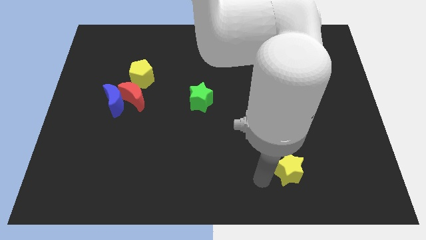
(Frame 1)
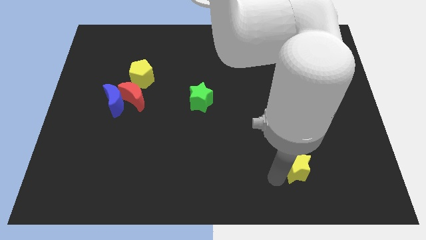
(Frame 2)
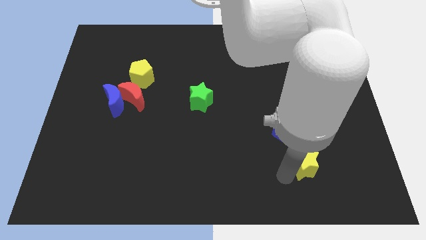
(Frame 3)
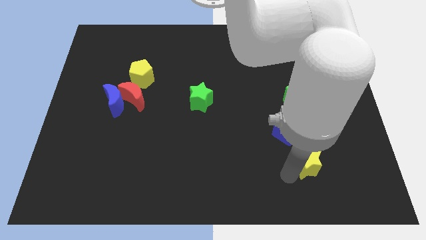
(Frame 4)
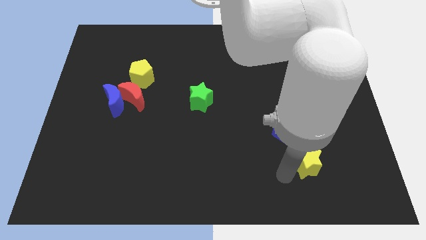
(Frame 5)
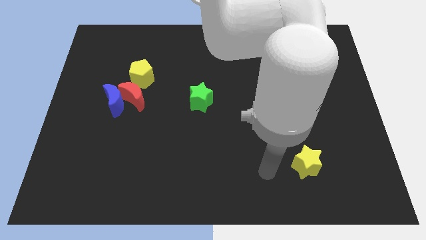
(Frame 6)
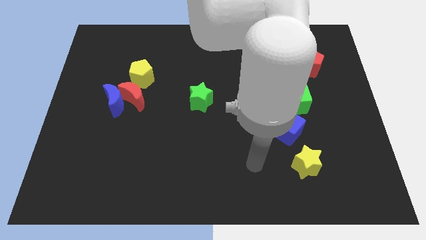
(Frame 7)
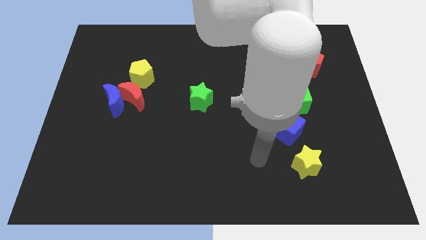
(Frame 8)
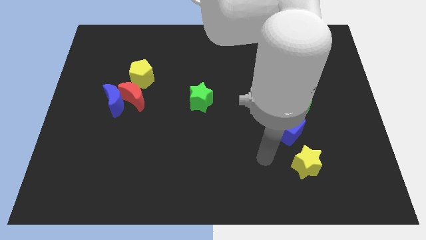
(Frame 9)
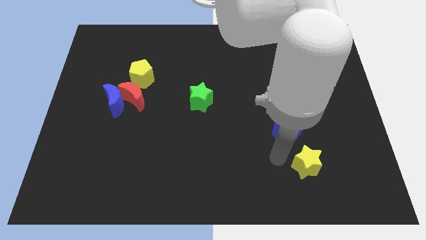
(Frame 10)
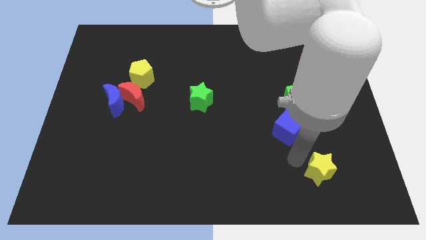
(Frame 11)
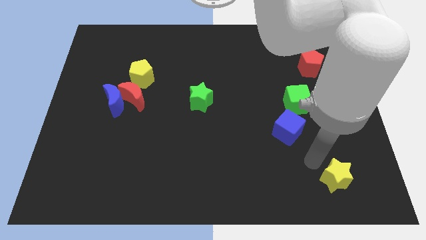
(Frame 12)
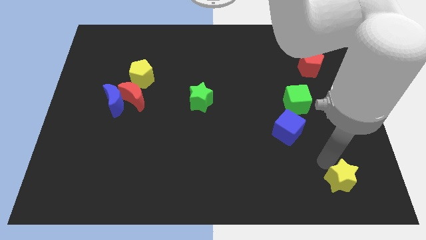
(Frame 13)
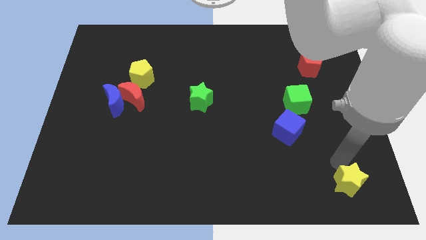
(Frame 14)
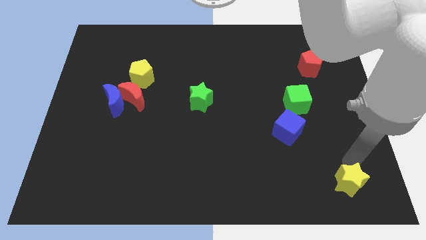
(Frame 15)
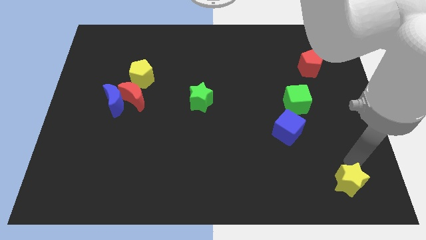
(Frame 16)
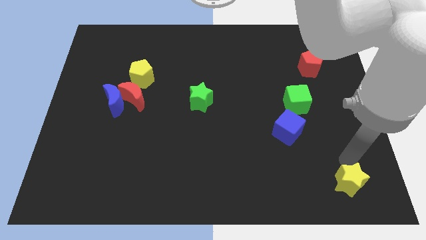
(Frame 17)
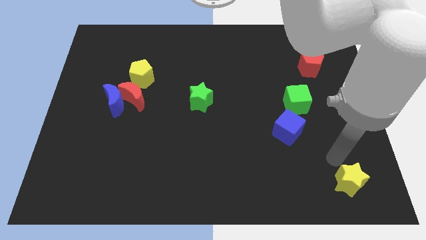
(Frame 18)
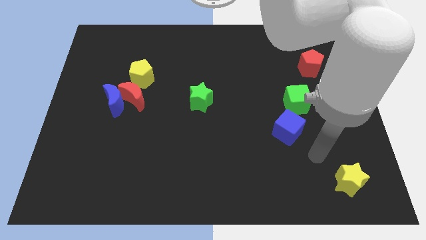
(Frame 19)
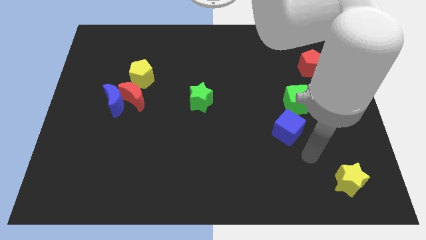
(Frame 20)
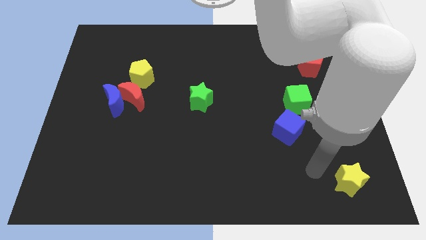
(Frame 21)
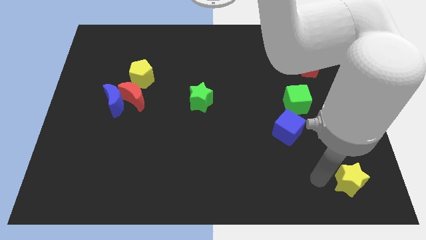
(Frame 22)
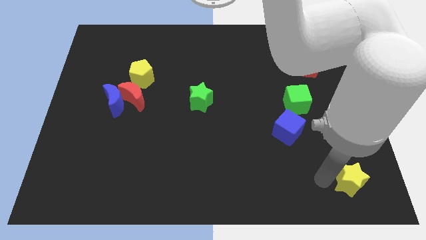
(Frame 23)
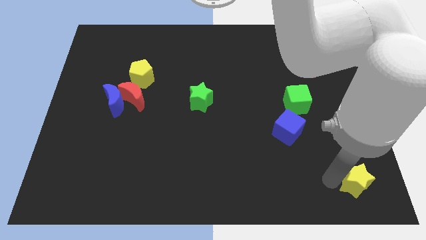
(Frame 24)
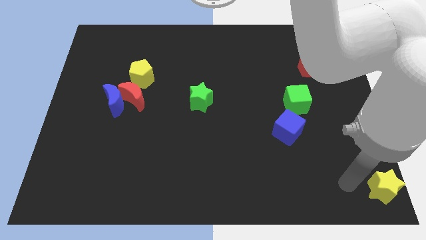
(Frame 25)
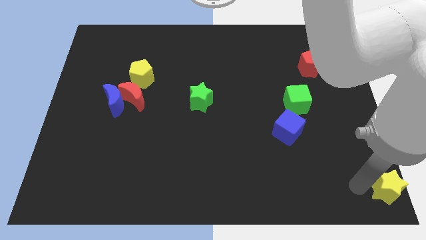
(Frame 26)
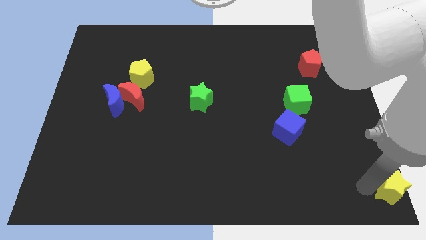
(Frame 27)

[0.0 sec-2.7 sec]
drag the yellow star to the bottom right

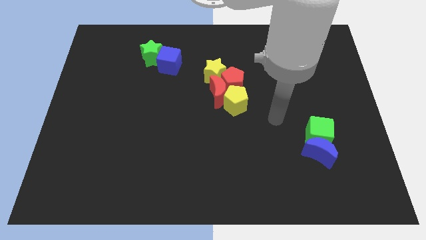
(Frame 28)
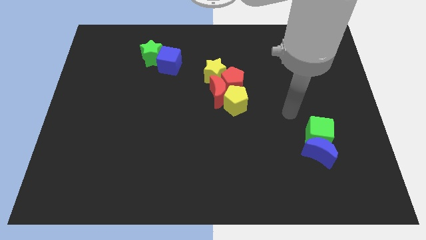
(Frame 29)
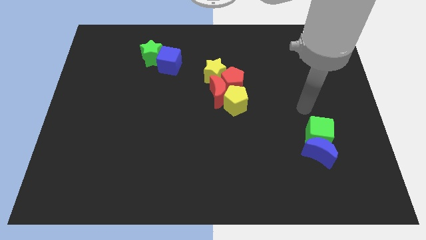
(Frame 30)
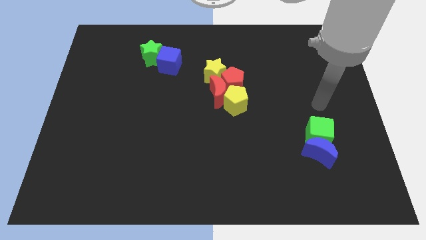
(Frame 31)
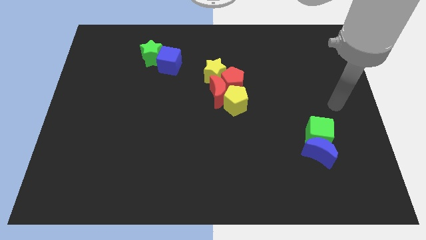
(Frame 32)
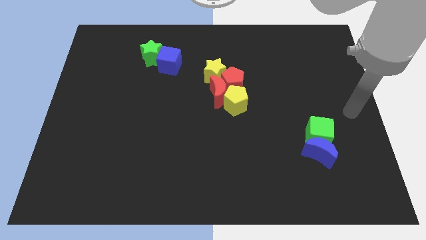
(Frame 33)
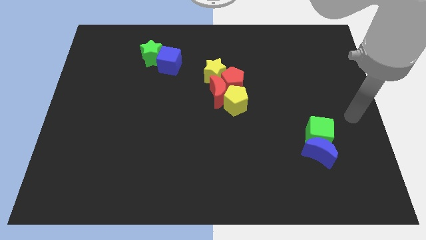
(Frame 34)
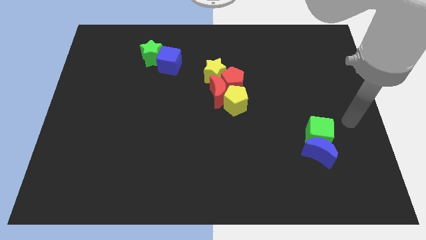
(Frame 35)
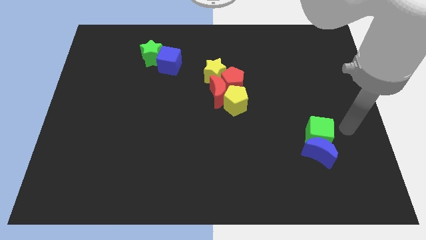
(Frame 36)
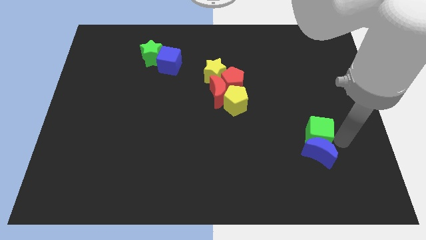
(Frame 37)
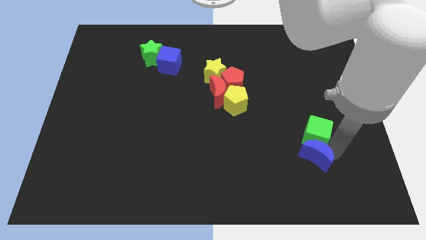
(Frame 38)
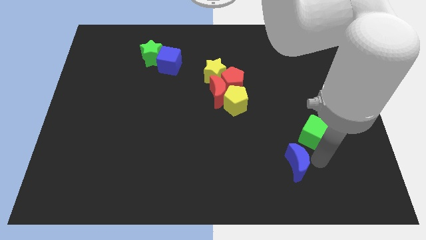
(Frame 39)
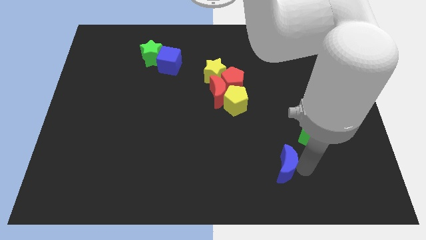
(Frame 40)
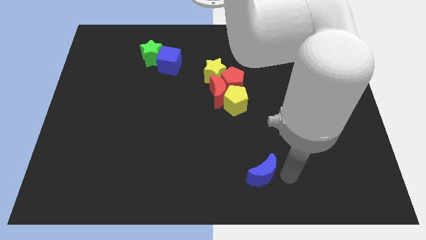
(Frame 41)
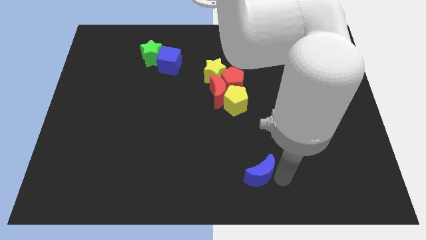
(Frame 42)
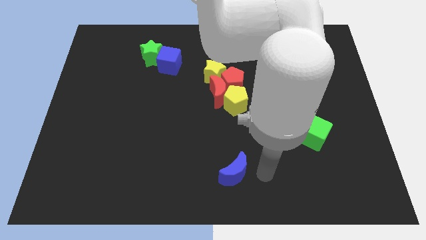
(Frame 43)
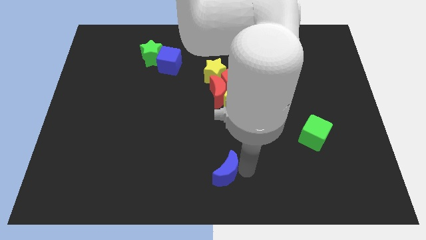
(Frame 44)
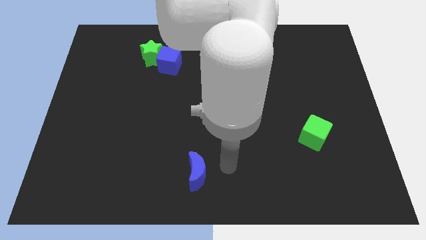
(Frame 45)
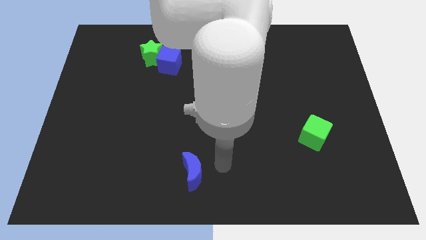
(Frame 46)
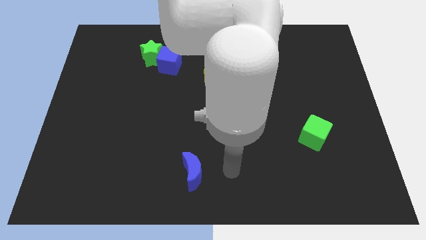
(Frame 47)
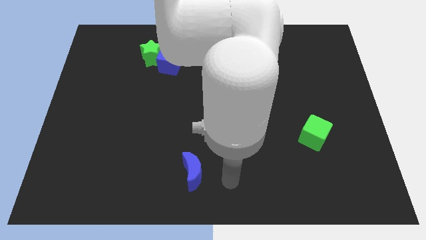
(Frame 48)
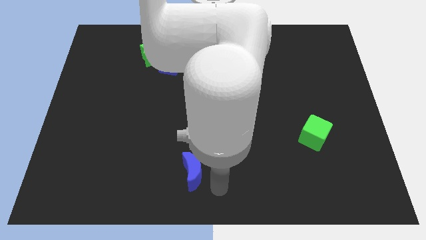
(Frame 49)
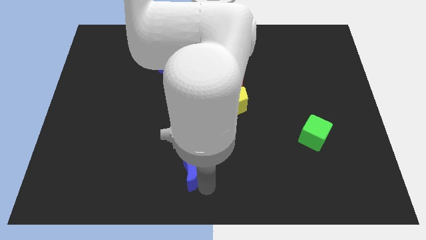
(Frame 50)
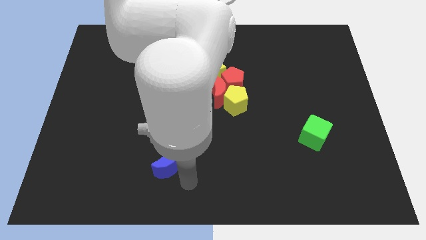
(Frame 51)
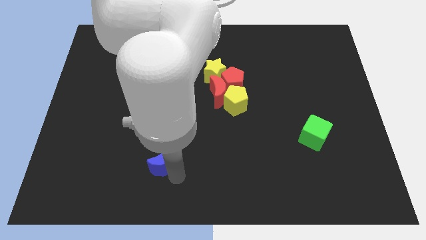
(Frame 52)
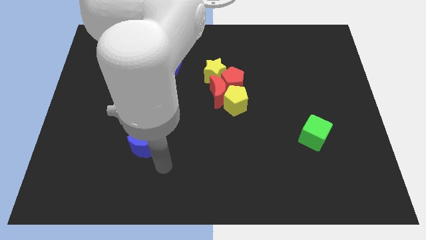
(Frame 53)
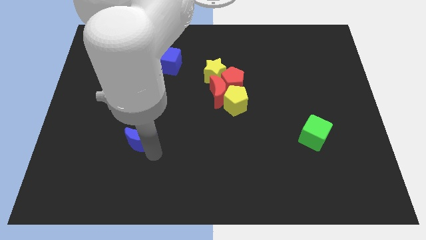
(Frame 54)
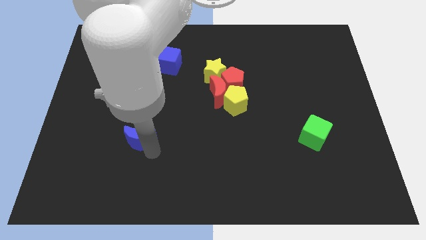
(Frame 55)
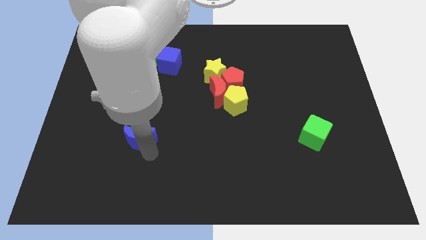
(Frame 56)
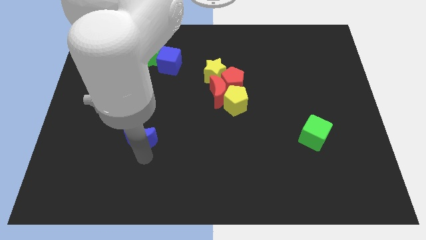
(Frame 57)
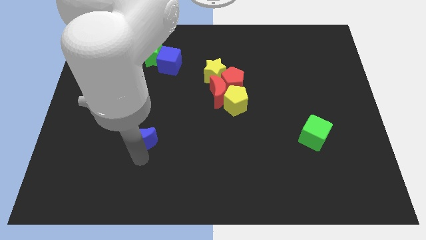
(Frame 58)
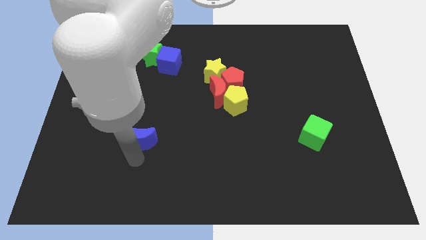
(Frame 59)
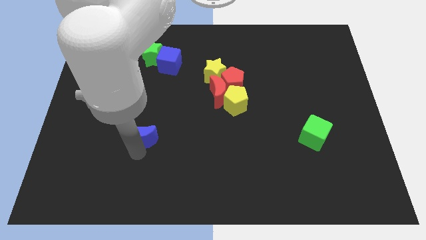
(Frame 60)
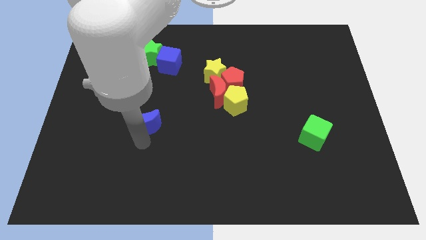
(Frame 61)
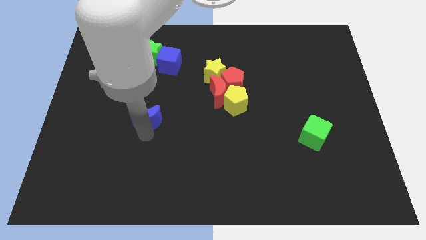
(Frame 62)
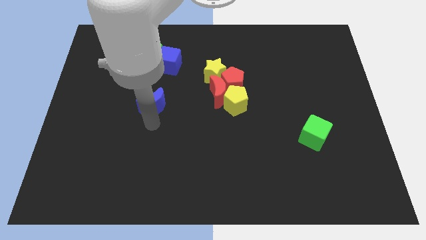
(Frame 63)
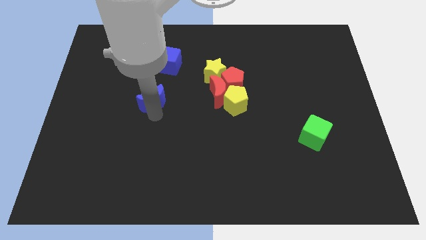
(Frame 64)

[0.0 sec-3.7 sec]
place the blue moon left to the red moon

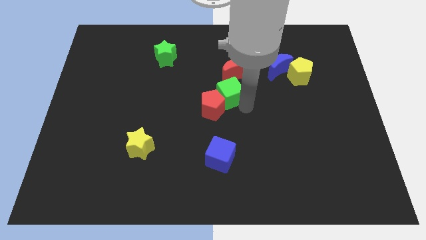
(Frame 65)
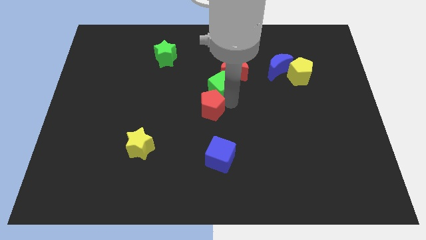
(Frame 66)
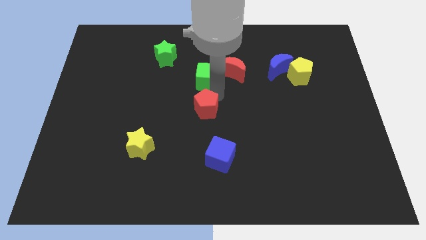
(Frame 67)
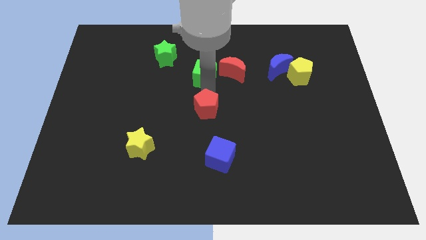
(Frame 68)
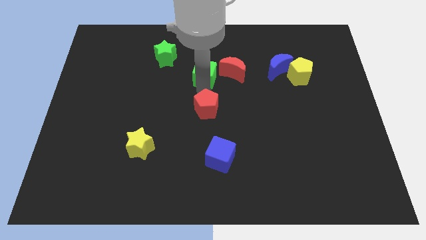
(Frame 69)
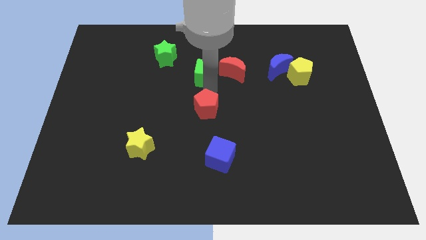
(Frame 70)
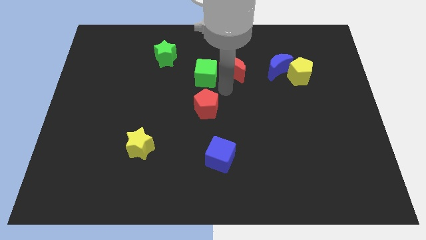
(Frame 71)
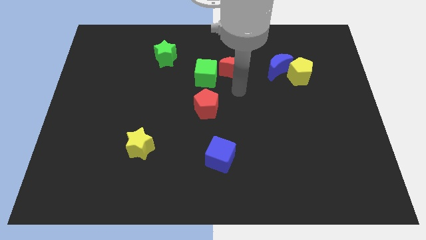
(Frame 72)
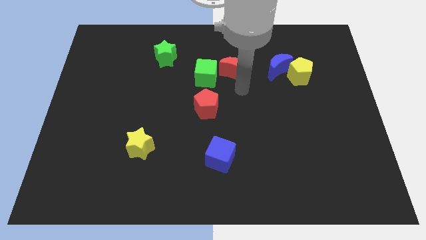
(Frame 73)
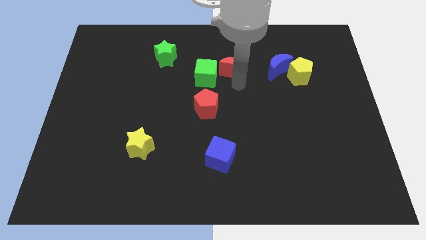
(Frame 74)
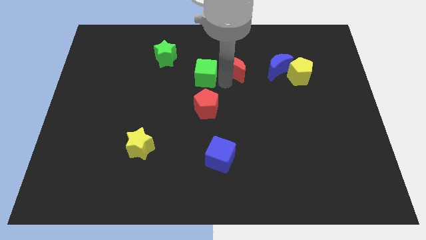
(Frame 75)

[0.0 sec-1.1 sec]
arrange the green cube on the top of the red pentagon

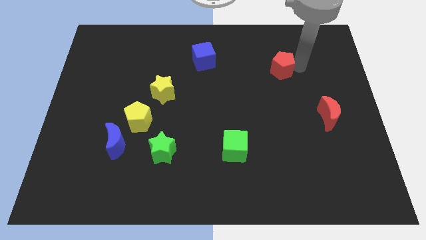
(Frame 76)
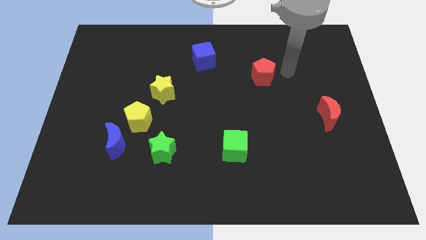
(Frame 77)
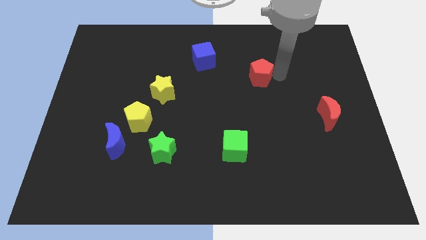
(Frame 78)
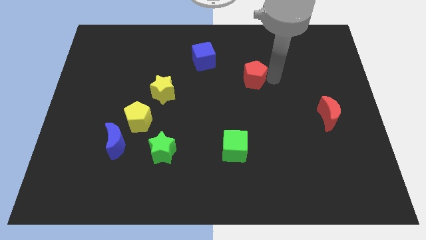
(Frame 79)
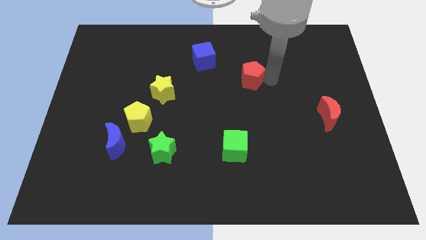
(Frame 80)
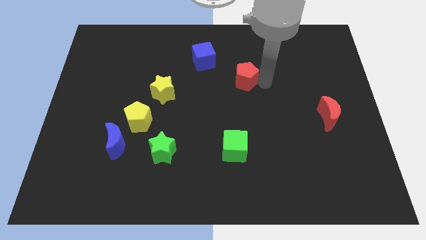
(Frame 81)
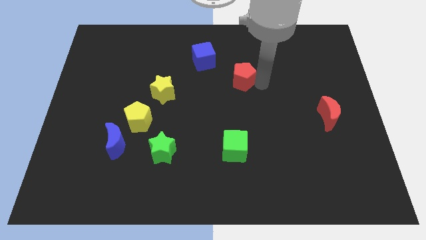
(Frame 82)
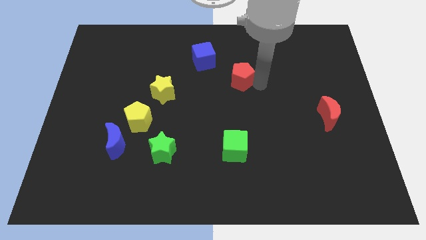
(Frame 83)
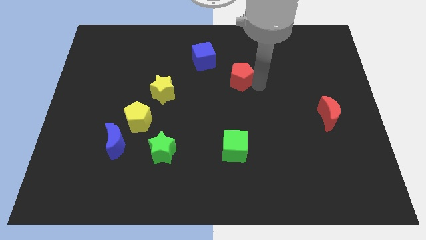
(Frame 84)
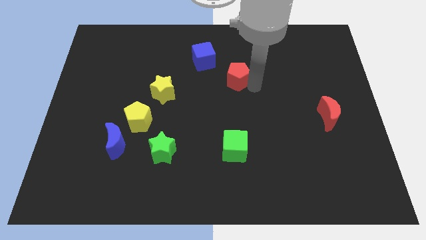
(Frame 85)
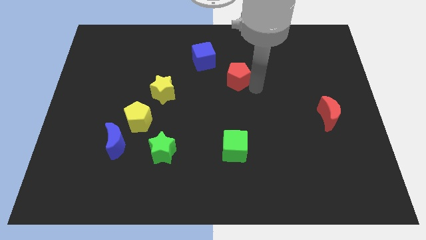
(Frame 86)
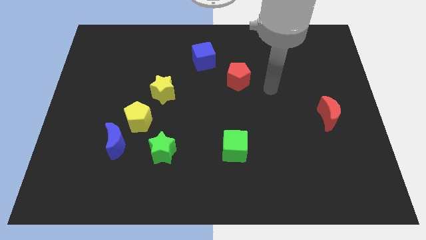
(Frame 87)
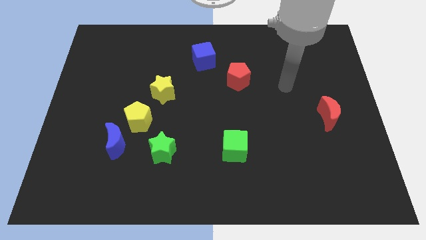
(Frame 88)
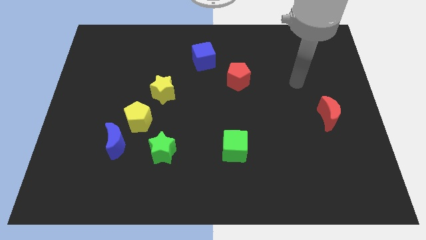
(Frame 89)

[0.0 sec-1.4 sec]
push the red pentagon close to the blue cube

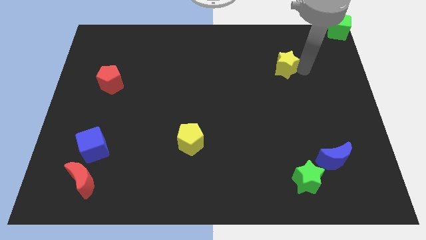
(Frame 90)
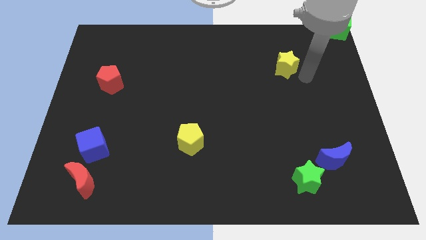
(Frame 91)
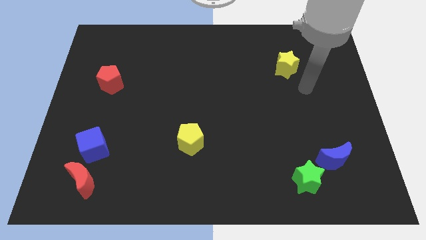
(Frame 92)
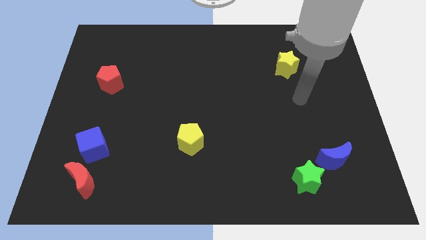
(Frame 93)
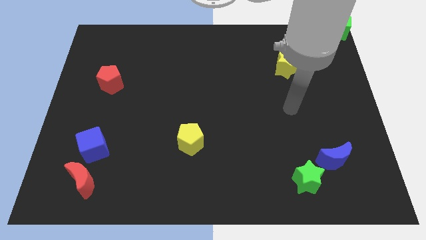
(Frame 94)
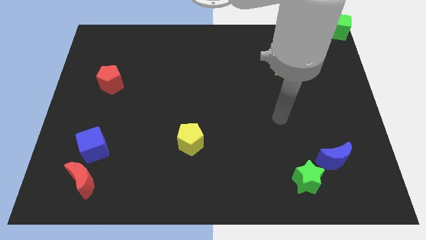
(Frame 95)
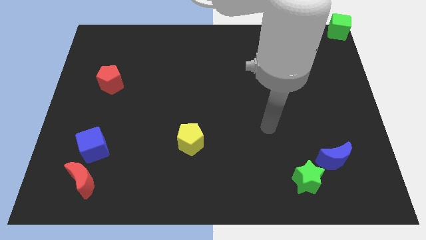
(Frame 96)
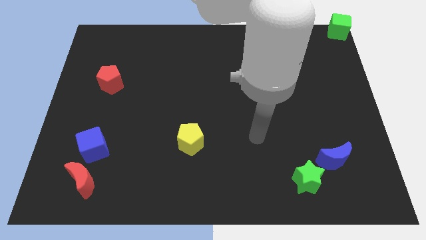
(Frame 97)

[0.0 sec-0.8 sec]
move the arm away from the yellow star
